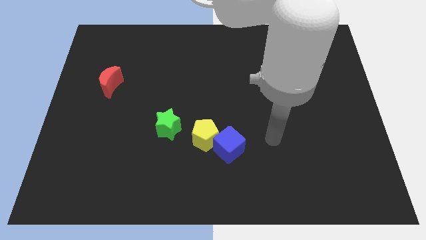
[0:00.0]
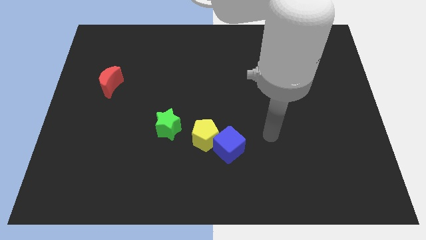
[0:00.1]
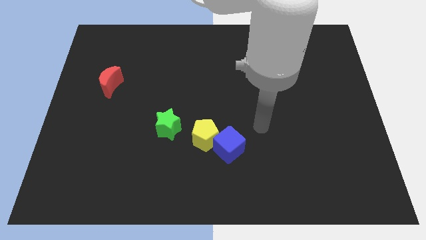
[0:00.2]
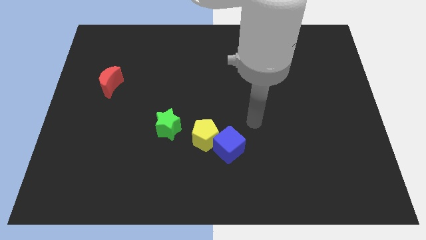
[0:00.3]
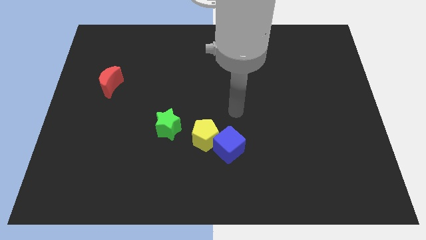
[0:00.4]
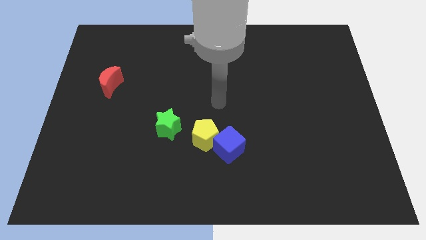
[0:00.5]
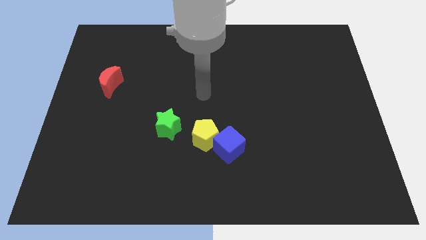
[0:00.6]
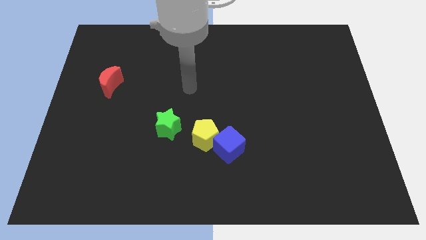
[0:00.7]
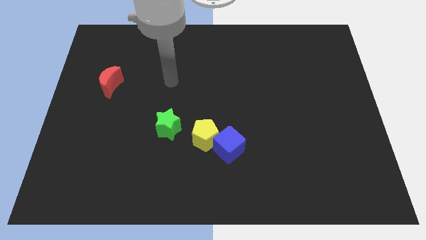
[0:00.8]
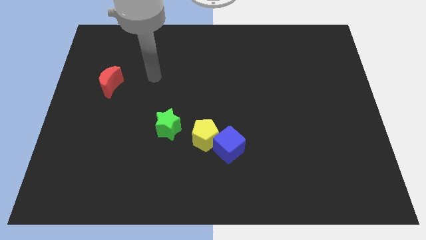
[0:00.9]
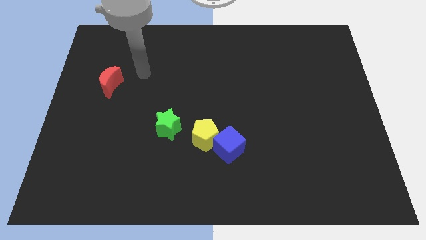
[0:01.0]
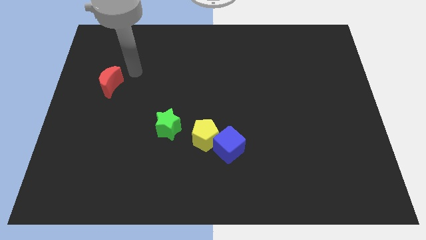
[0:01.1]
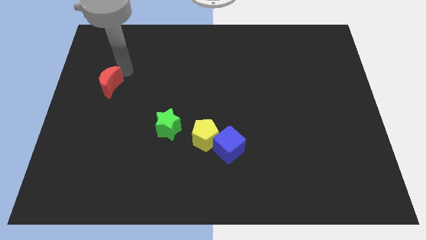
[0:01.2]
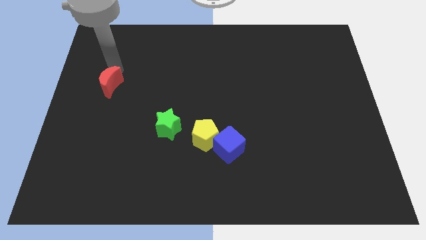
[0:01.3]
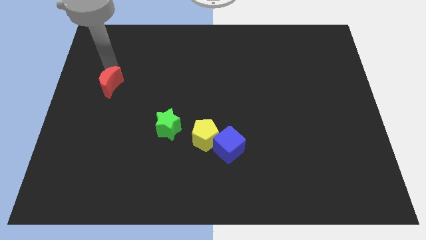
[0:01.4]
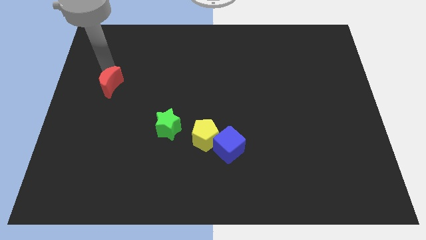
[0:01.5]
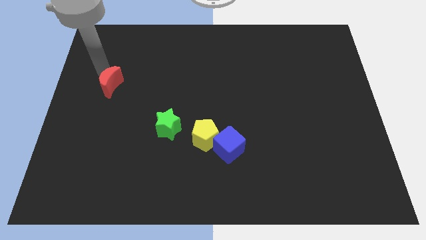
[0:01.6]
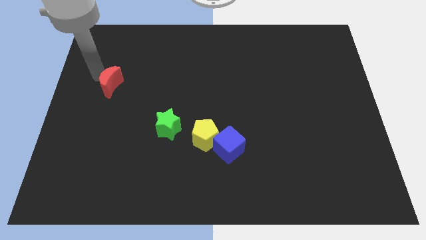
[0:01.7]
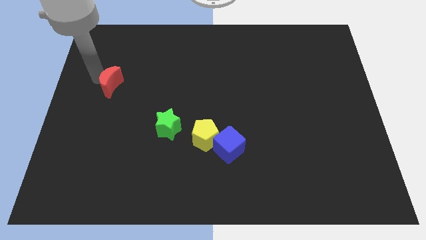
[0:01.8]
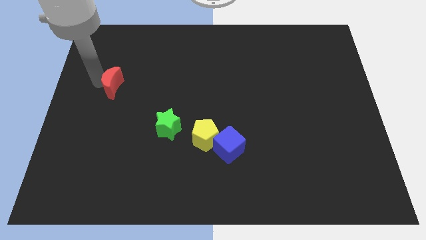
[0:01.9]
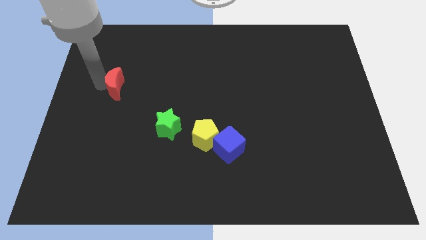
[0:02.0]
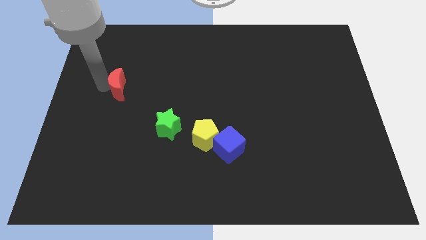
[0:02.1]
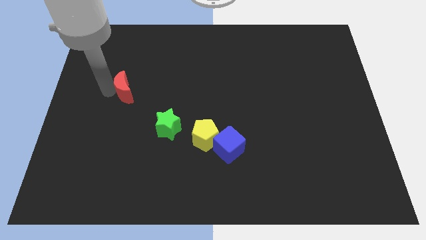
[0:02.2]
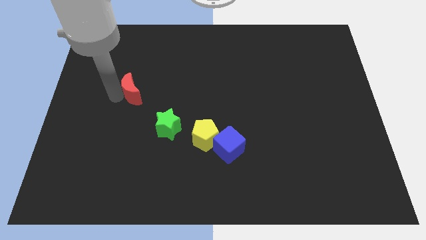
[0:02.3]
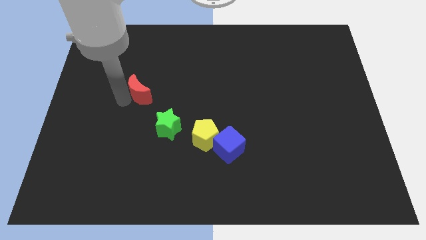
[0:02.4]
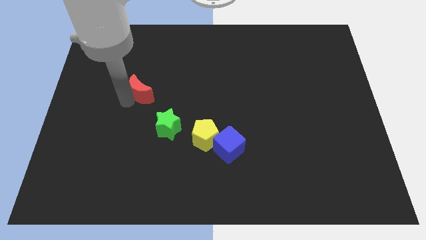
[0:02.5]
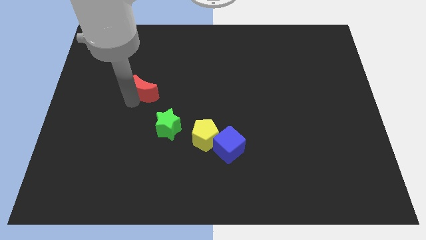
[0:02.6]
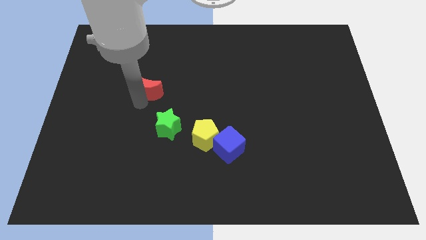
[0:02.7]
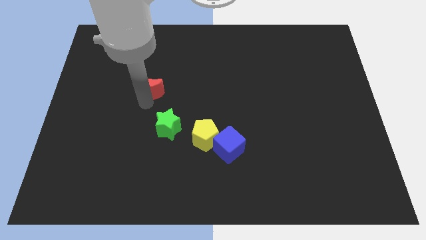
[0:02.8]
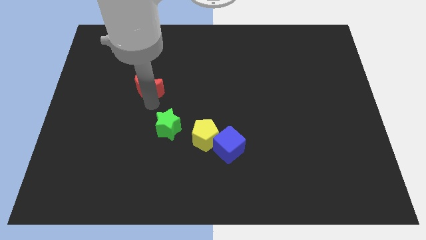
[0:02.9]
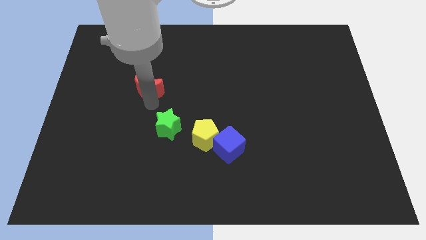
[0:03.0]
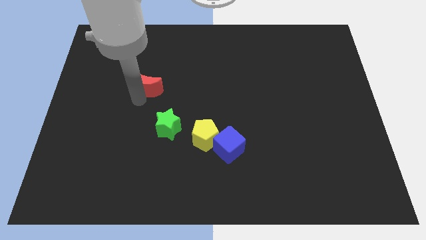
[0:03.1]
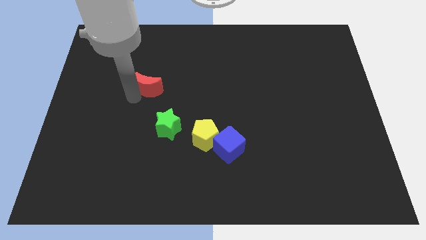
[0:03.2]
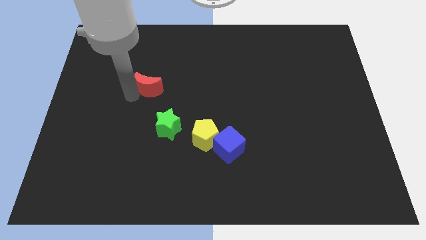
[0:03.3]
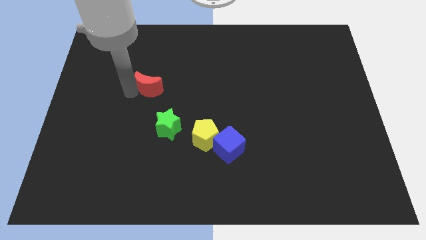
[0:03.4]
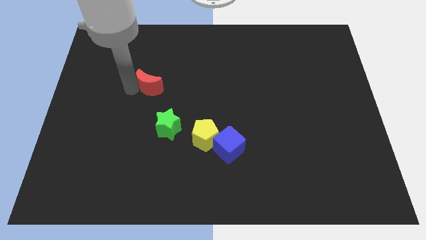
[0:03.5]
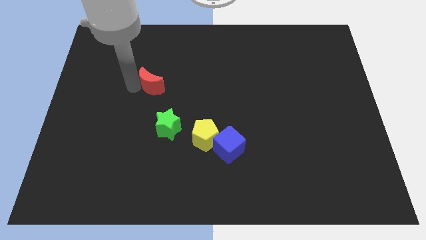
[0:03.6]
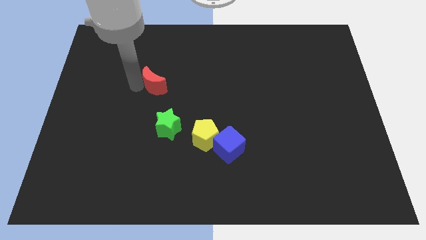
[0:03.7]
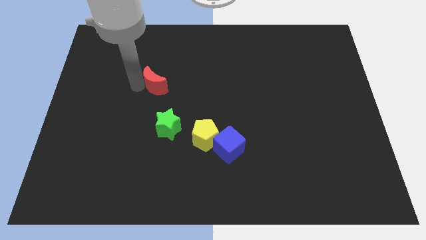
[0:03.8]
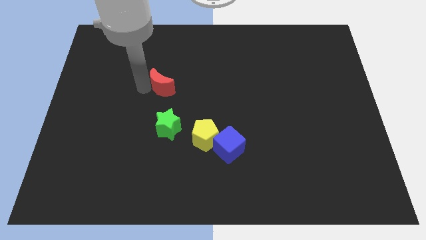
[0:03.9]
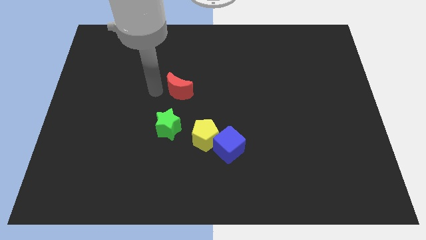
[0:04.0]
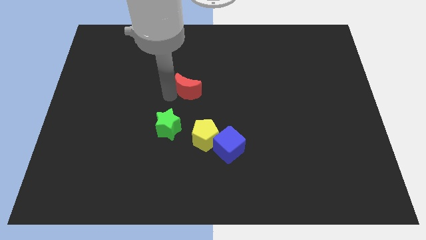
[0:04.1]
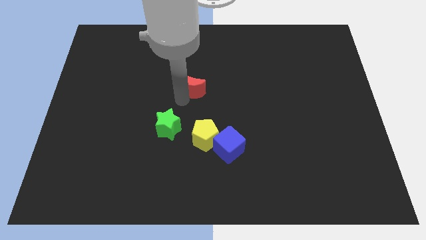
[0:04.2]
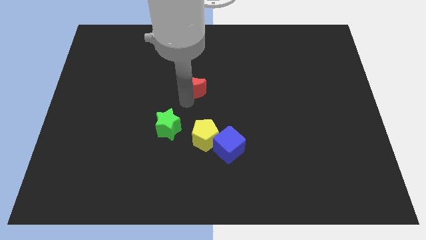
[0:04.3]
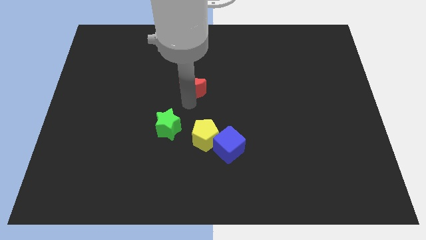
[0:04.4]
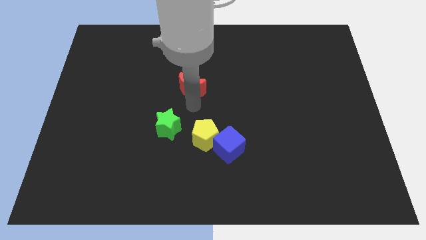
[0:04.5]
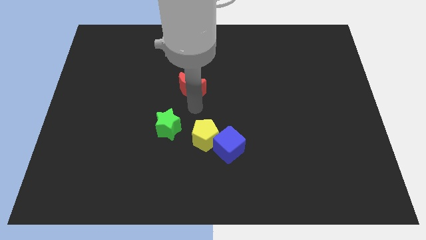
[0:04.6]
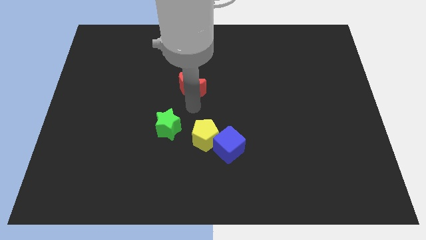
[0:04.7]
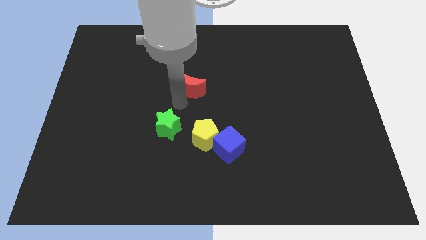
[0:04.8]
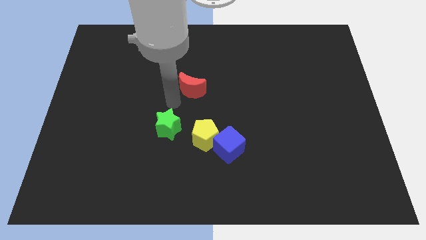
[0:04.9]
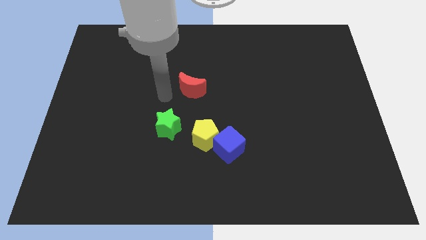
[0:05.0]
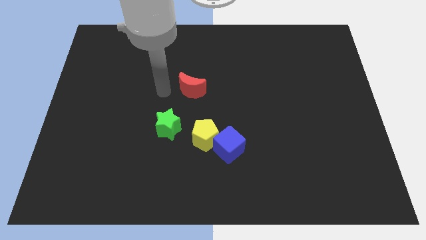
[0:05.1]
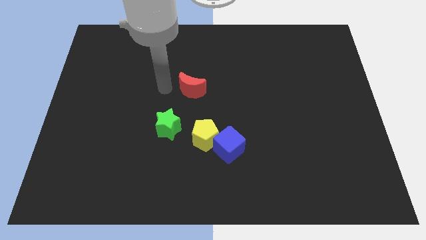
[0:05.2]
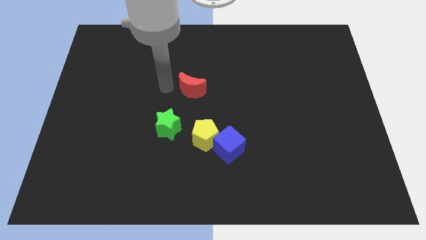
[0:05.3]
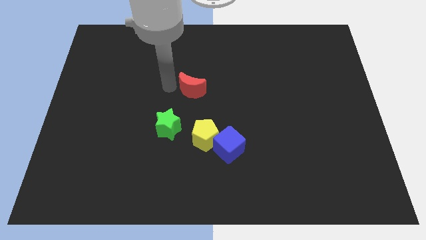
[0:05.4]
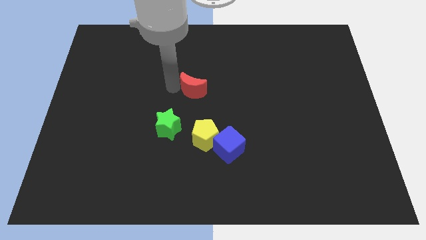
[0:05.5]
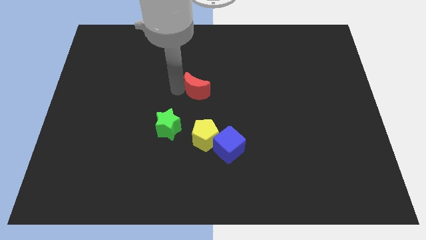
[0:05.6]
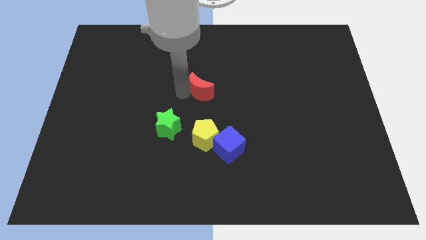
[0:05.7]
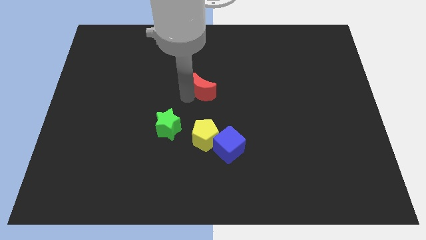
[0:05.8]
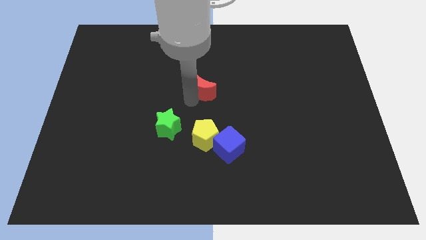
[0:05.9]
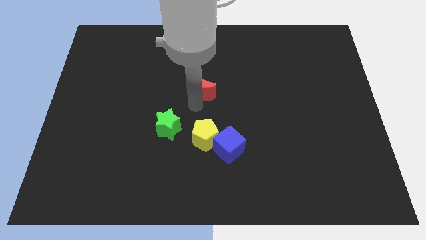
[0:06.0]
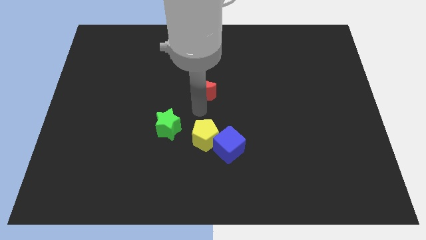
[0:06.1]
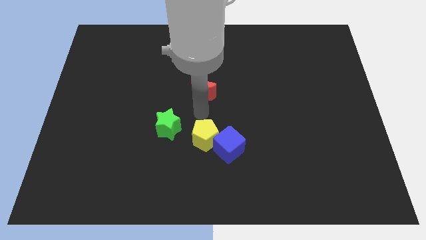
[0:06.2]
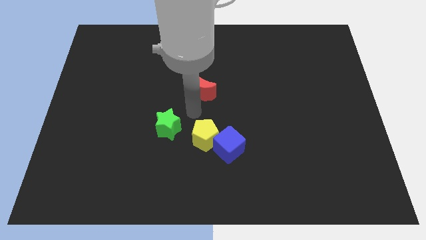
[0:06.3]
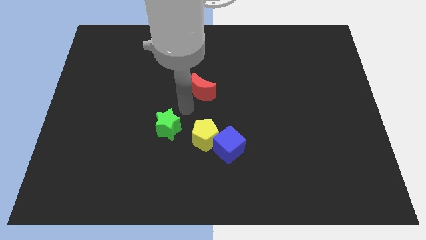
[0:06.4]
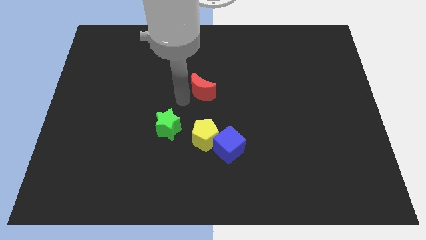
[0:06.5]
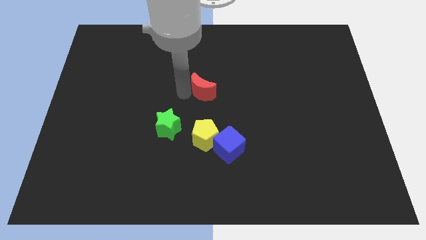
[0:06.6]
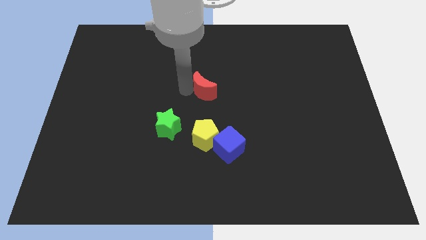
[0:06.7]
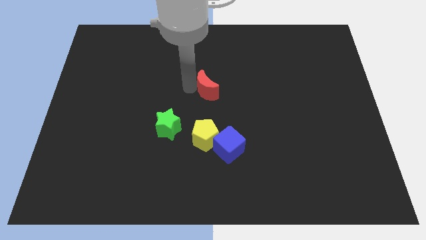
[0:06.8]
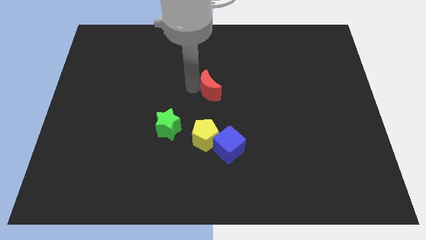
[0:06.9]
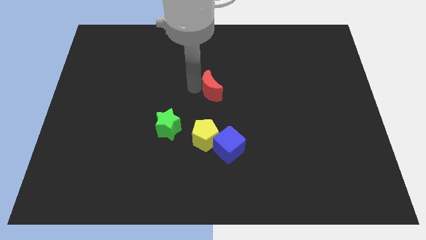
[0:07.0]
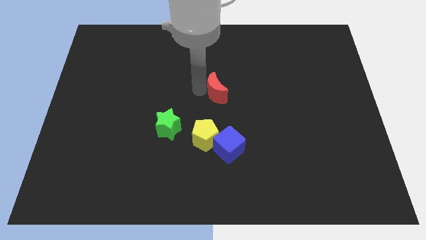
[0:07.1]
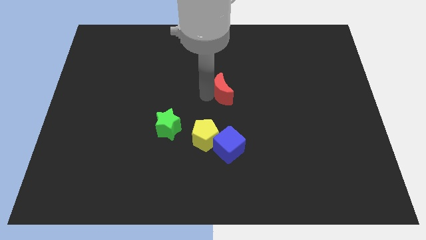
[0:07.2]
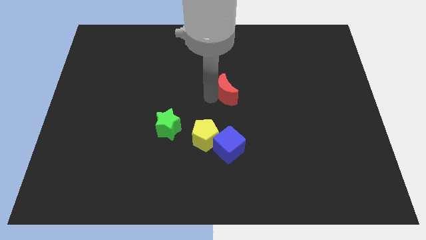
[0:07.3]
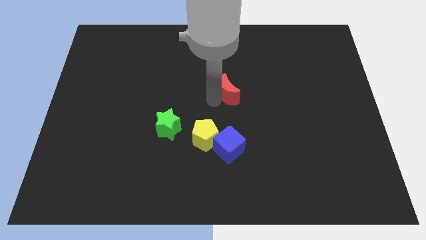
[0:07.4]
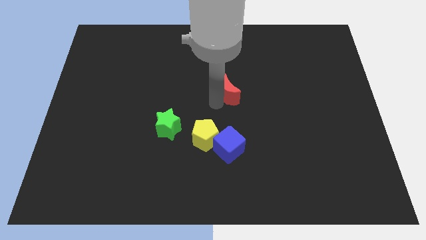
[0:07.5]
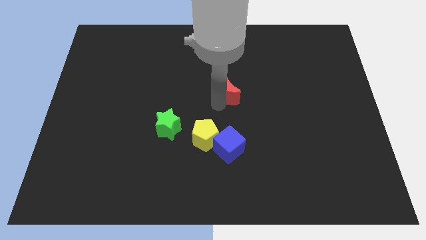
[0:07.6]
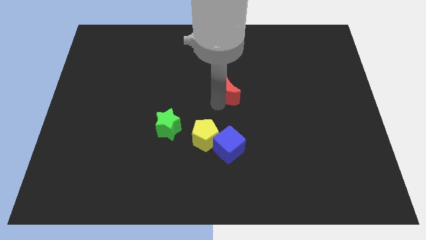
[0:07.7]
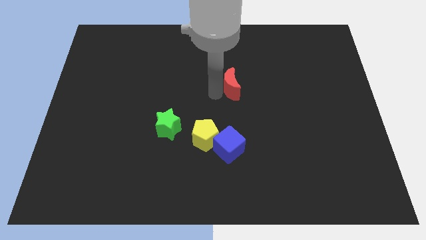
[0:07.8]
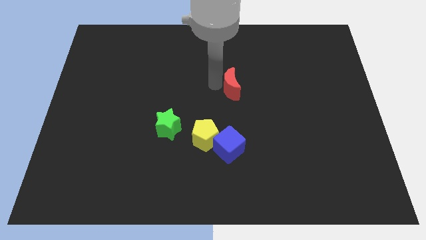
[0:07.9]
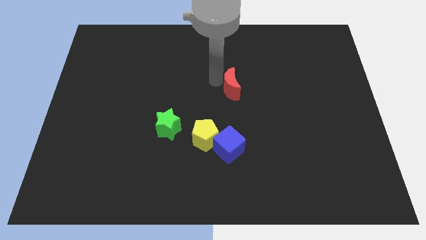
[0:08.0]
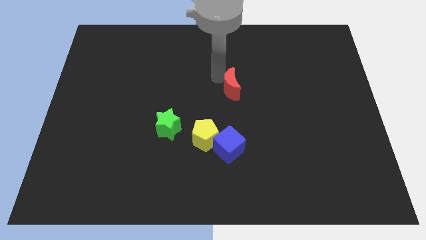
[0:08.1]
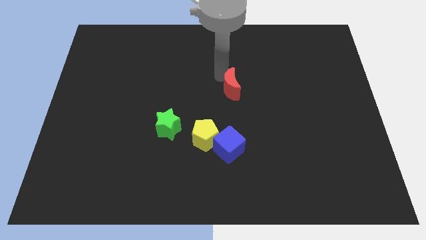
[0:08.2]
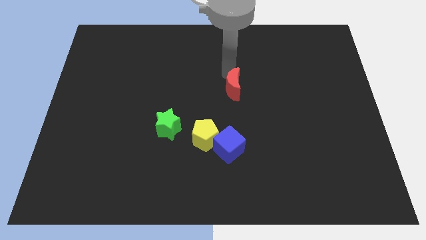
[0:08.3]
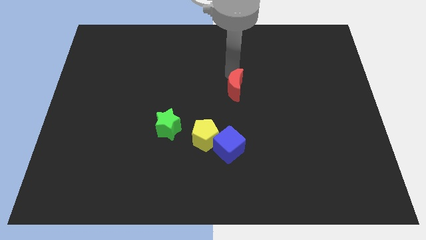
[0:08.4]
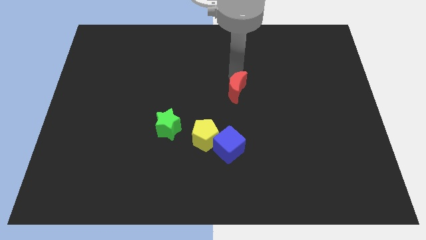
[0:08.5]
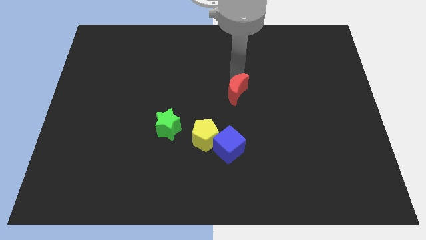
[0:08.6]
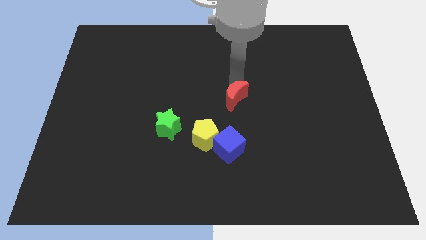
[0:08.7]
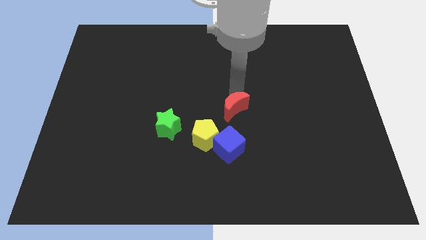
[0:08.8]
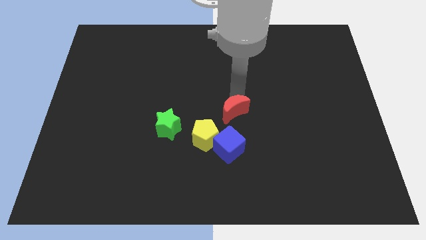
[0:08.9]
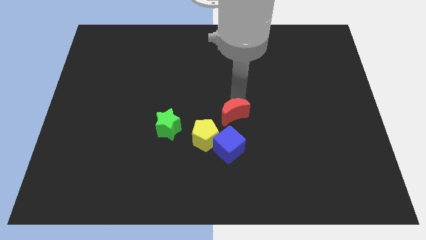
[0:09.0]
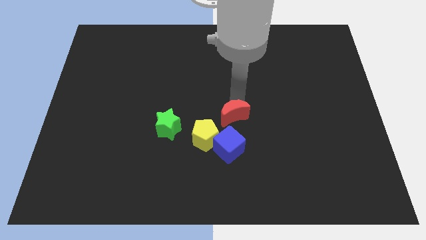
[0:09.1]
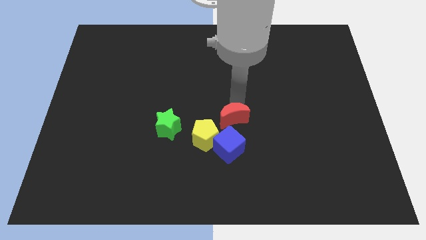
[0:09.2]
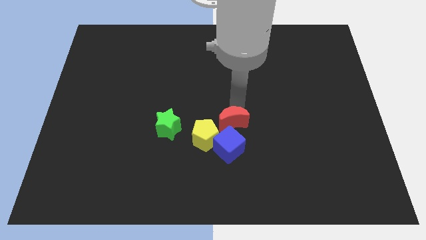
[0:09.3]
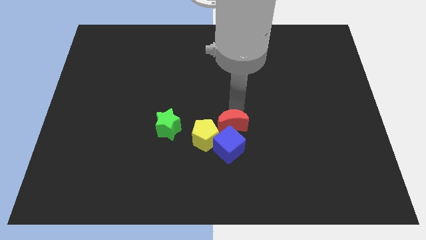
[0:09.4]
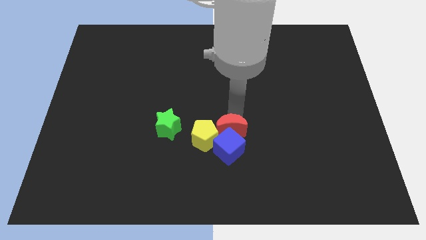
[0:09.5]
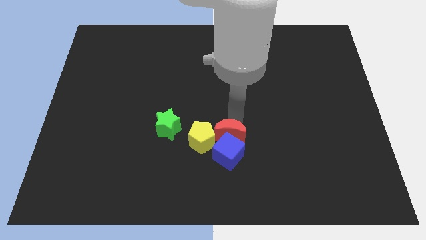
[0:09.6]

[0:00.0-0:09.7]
push the moon towards the blue block
